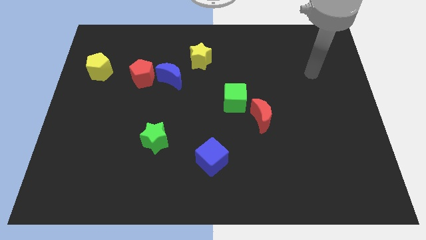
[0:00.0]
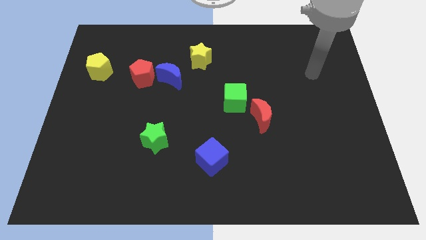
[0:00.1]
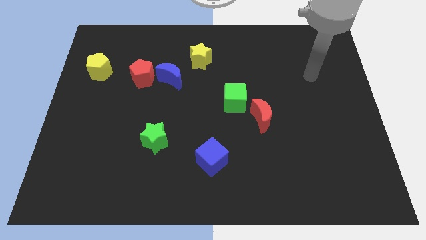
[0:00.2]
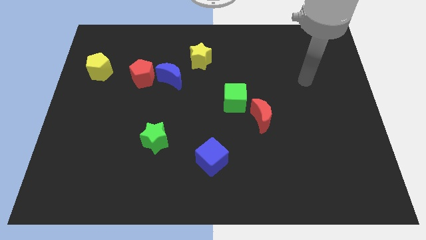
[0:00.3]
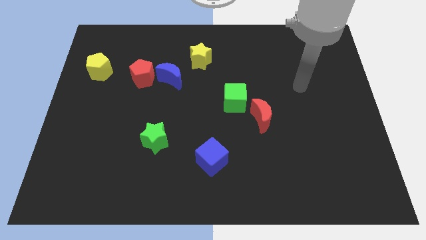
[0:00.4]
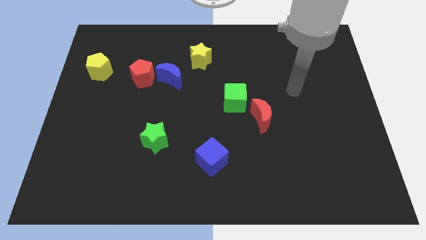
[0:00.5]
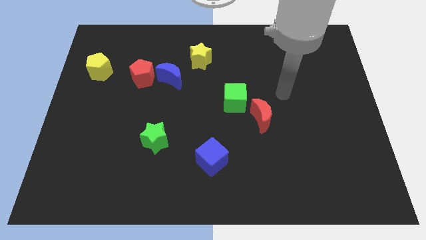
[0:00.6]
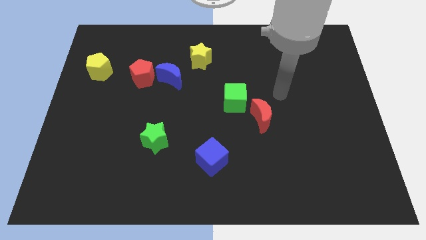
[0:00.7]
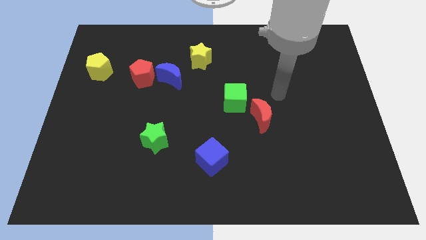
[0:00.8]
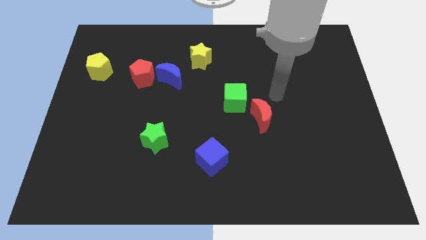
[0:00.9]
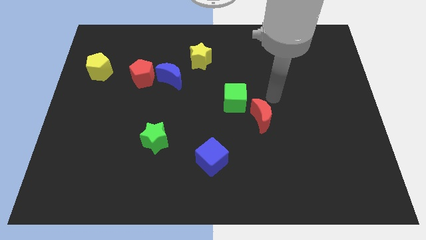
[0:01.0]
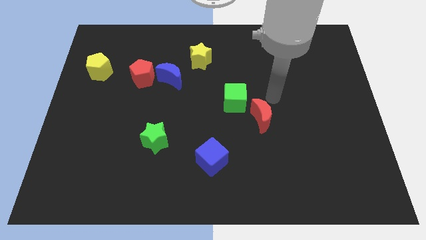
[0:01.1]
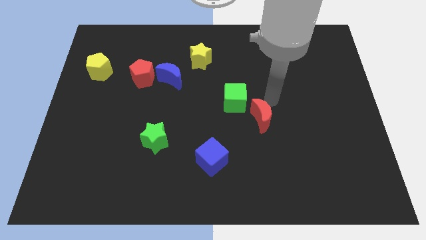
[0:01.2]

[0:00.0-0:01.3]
go and place your arm at the right of the green cube

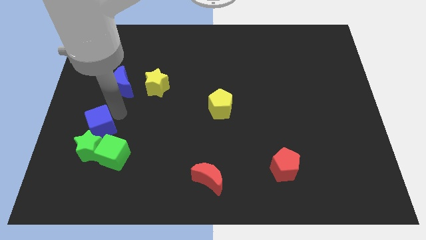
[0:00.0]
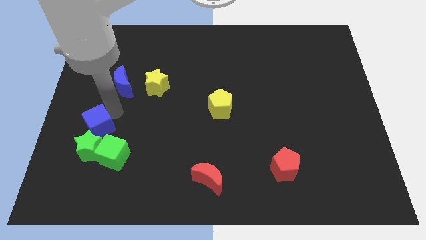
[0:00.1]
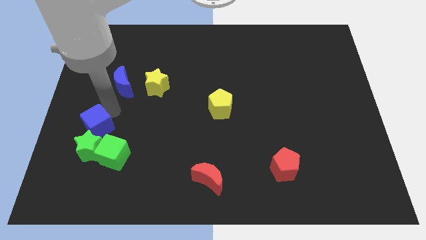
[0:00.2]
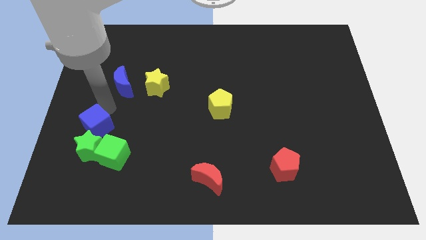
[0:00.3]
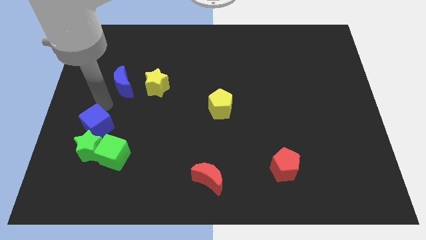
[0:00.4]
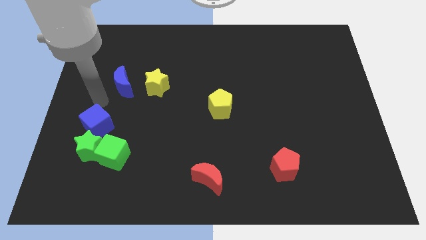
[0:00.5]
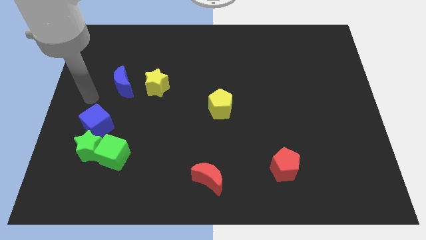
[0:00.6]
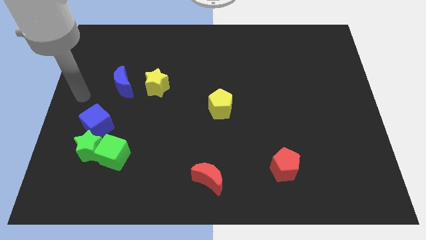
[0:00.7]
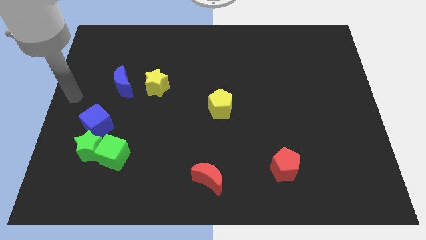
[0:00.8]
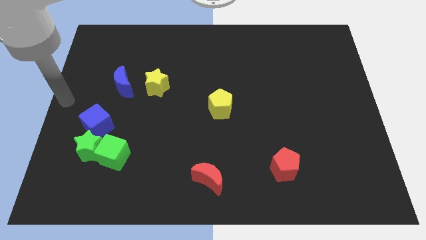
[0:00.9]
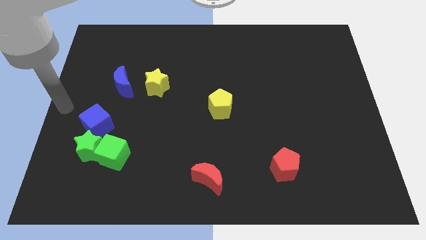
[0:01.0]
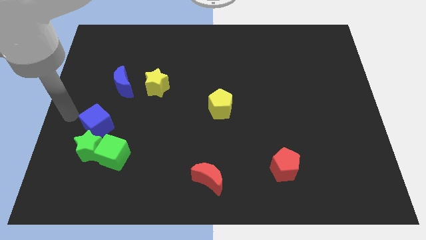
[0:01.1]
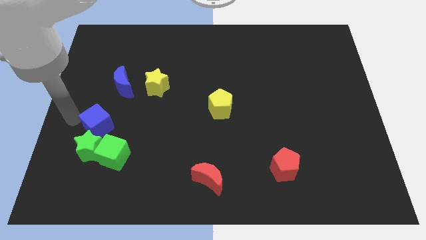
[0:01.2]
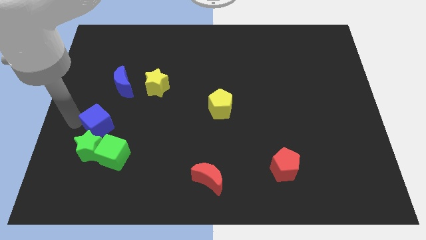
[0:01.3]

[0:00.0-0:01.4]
place your arm at the left of the blue cube

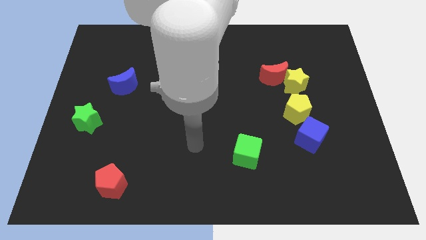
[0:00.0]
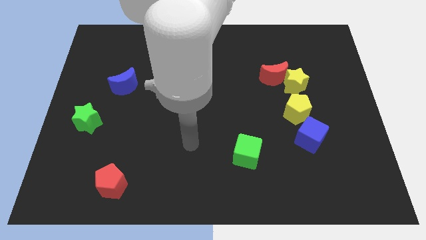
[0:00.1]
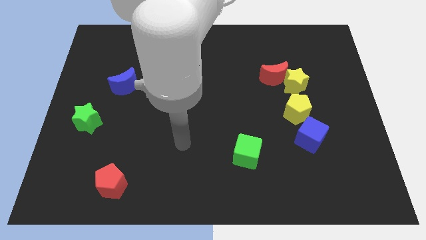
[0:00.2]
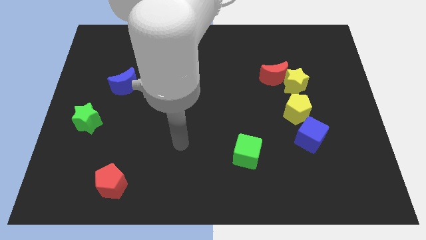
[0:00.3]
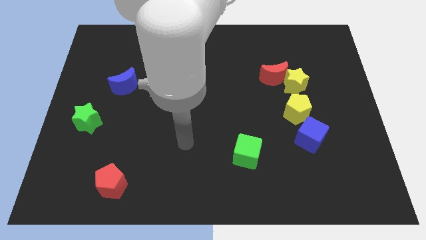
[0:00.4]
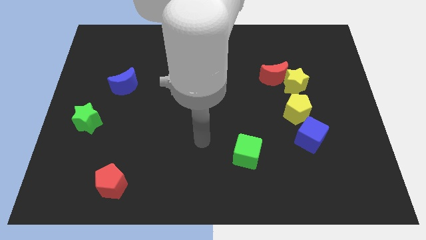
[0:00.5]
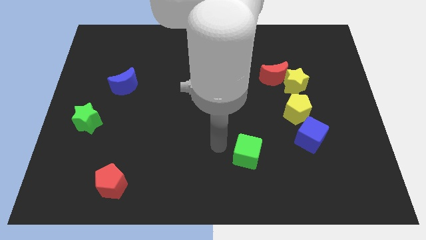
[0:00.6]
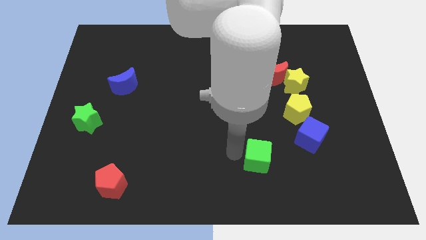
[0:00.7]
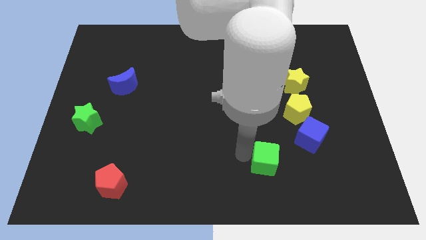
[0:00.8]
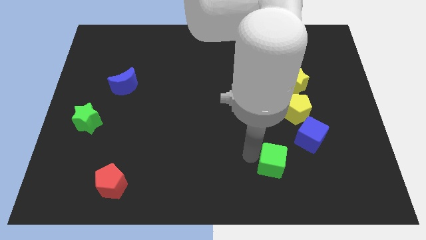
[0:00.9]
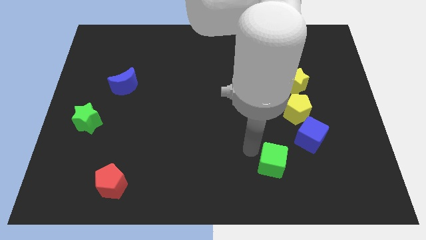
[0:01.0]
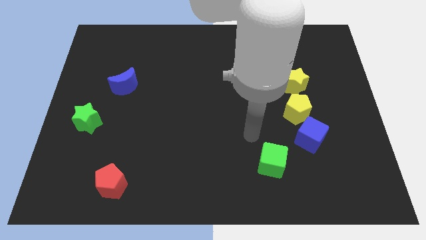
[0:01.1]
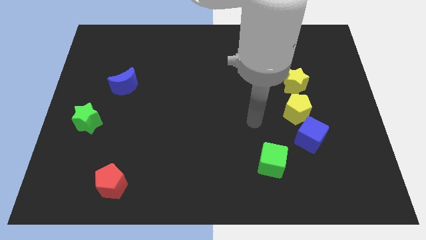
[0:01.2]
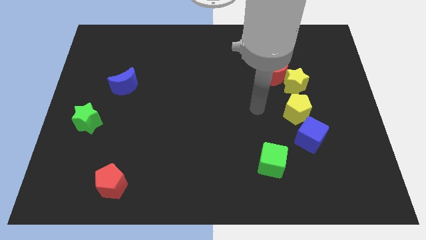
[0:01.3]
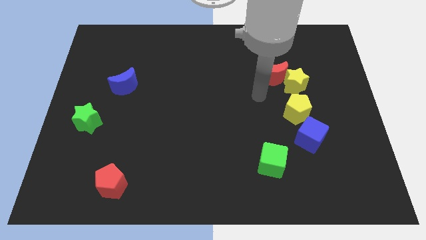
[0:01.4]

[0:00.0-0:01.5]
move the green cube slightly to the right

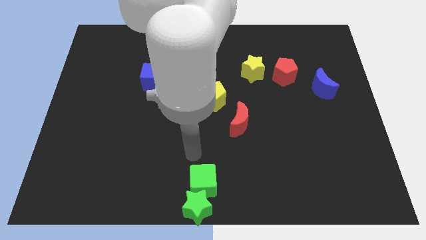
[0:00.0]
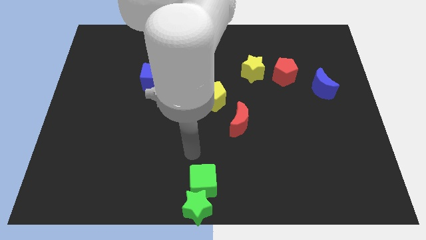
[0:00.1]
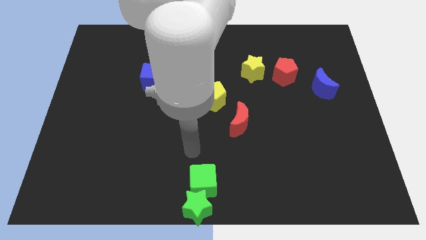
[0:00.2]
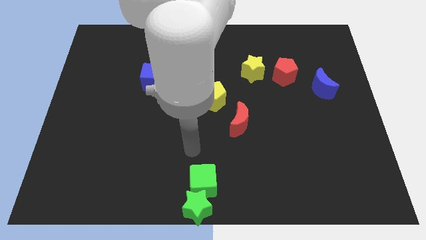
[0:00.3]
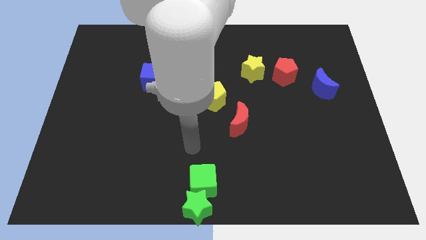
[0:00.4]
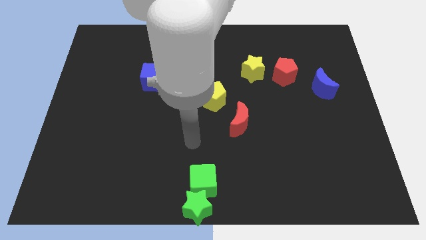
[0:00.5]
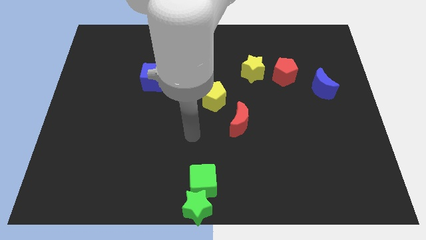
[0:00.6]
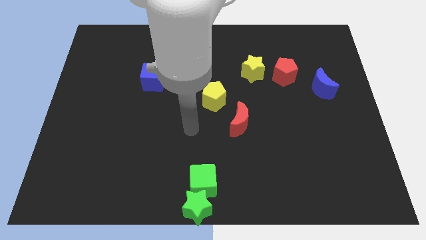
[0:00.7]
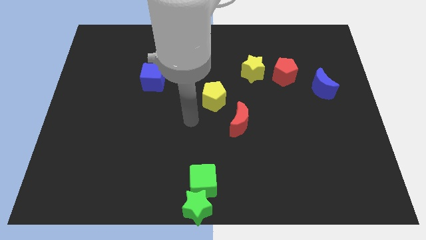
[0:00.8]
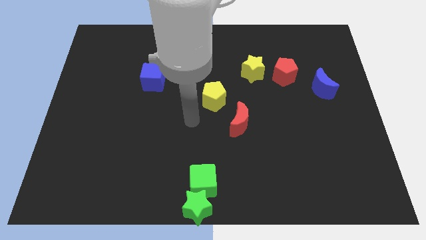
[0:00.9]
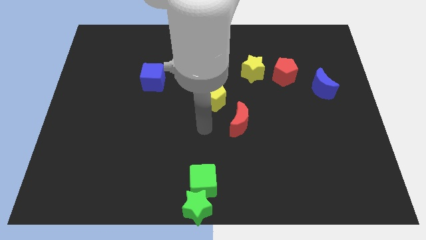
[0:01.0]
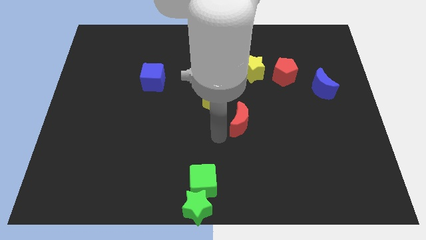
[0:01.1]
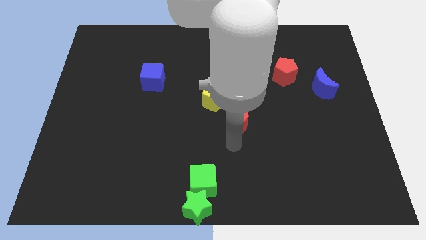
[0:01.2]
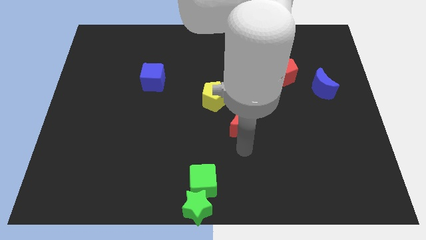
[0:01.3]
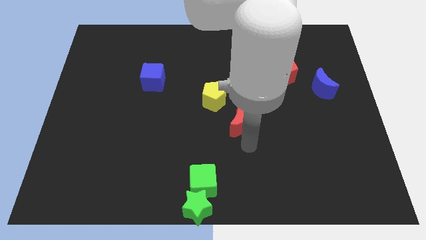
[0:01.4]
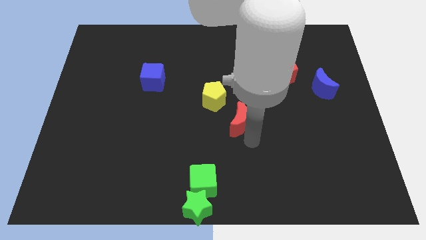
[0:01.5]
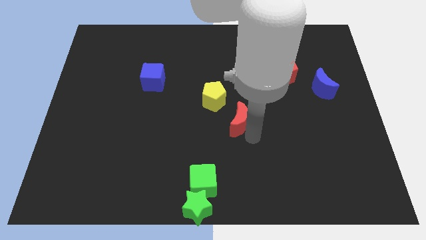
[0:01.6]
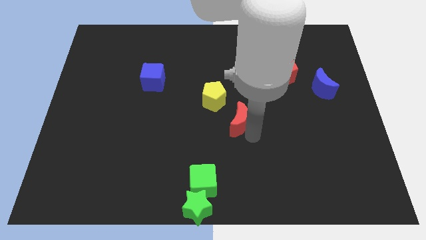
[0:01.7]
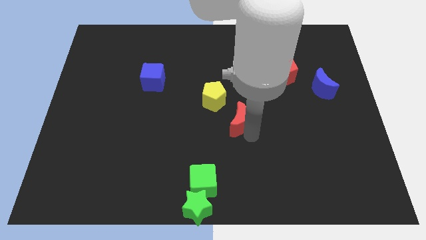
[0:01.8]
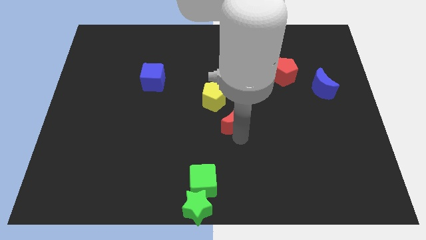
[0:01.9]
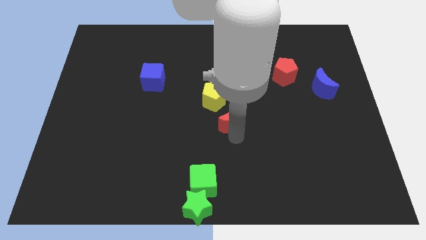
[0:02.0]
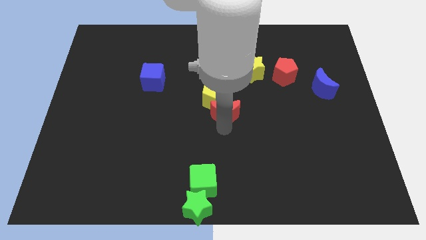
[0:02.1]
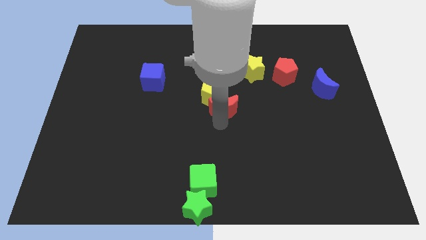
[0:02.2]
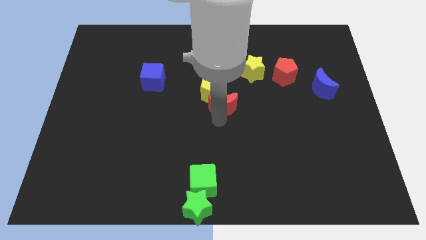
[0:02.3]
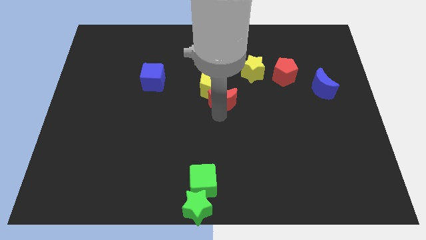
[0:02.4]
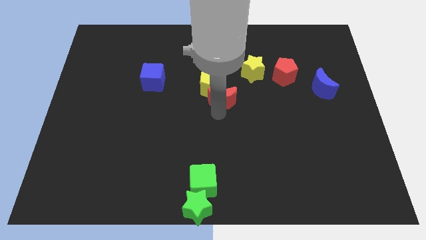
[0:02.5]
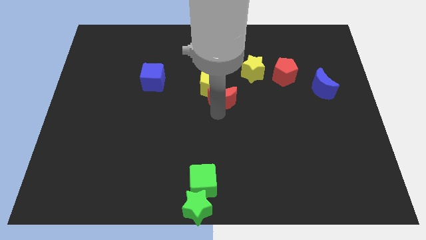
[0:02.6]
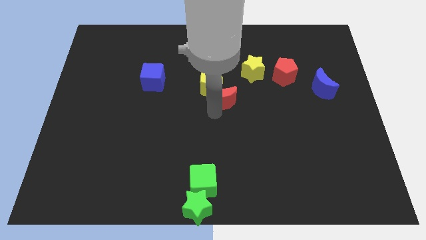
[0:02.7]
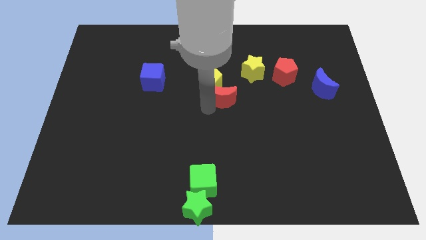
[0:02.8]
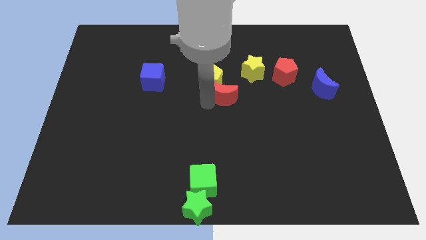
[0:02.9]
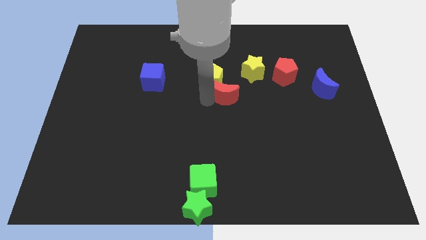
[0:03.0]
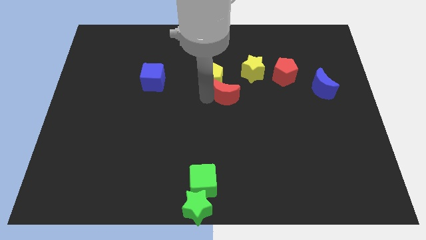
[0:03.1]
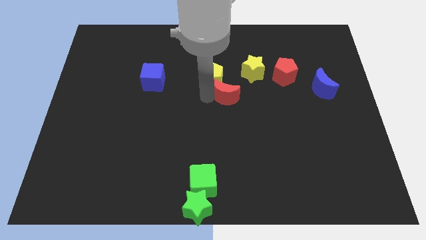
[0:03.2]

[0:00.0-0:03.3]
push red crescent along with the yellow pentagon towards up

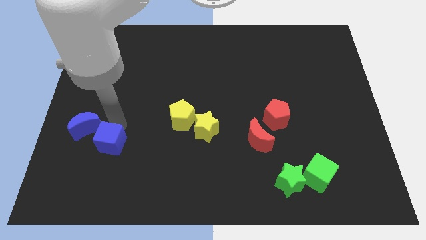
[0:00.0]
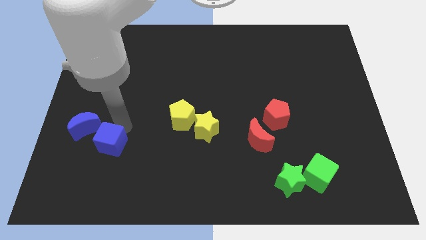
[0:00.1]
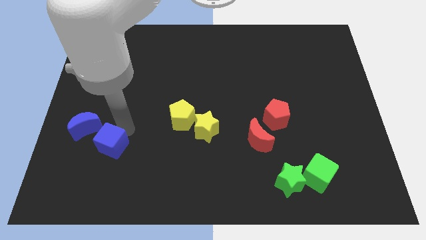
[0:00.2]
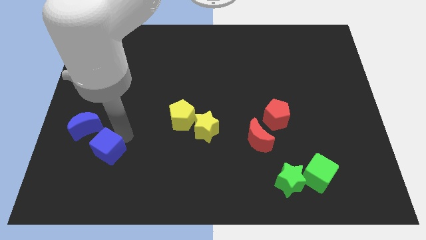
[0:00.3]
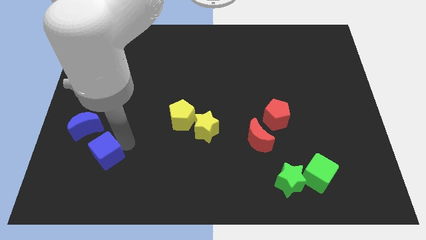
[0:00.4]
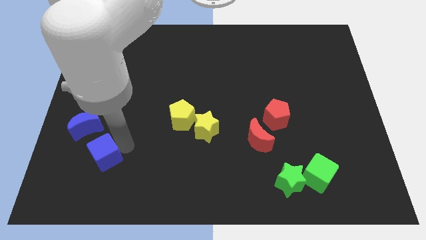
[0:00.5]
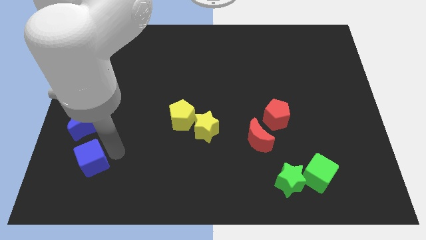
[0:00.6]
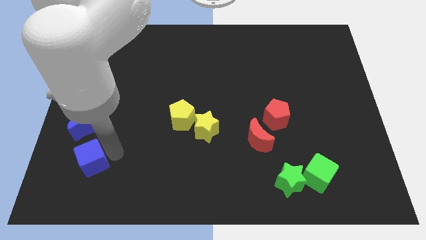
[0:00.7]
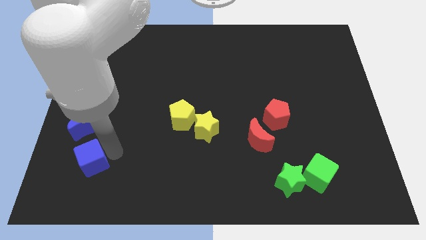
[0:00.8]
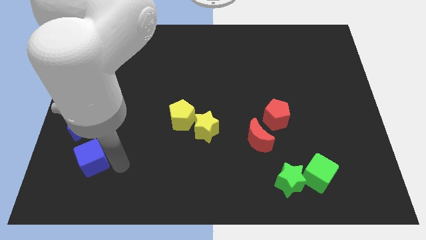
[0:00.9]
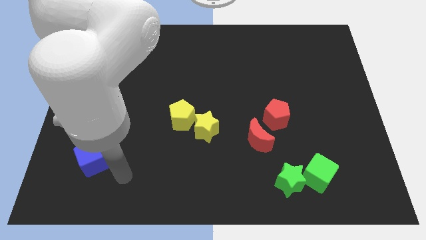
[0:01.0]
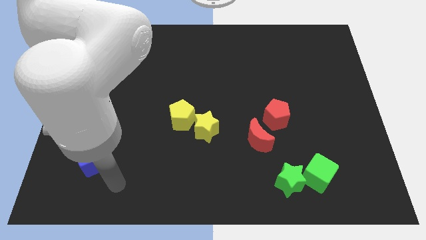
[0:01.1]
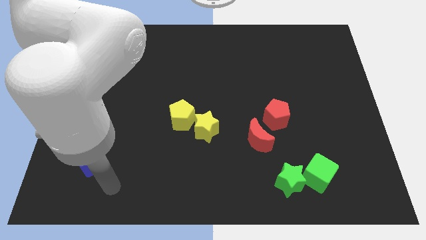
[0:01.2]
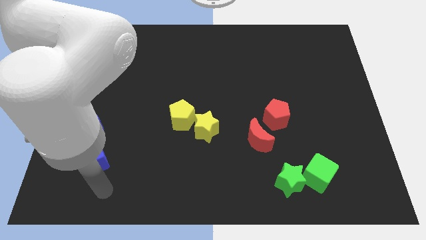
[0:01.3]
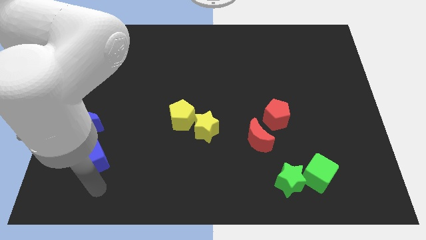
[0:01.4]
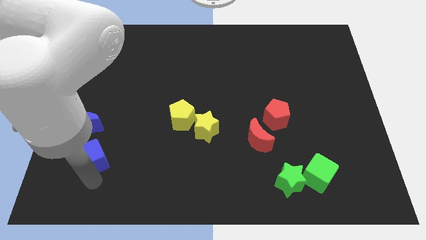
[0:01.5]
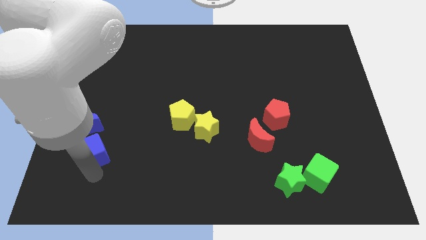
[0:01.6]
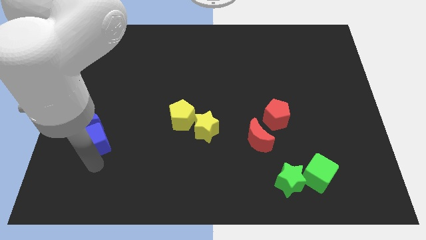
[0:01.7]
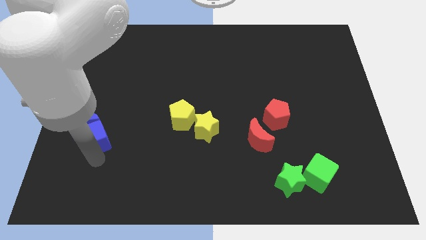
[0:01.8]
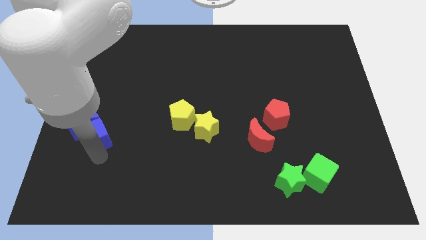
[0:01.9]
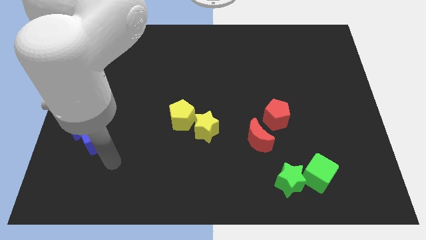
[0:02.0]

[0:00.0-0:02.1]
move the blue cube into the blue crescent
